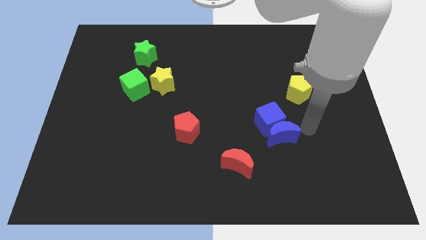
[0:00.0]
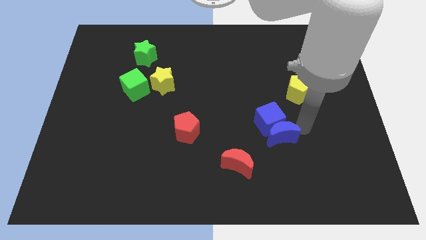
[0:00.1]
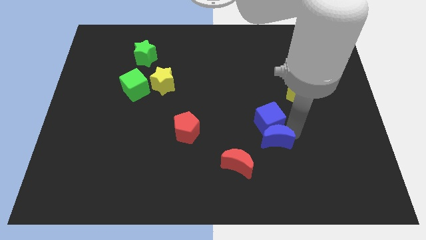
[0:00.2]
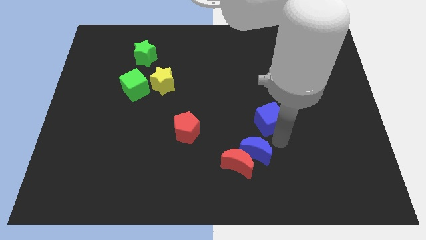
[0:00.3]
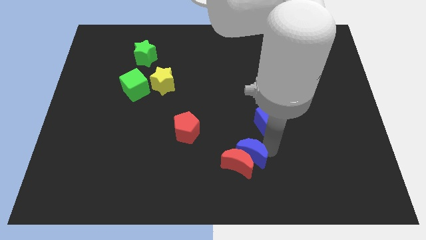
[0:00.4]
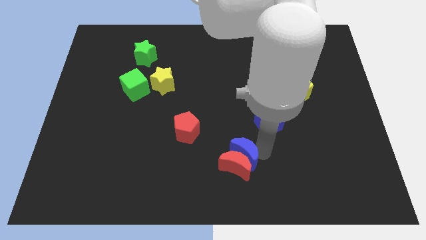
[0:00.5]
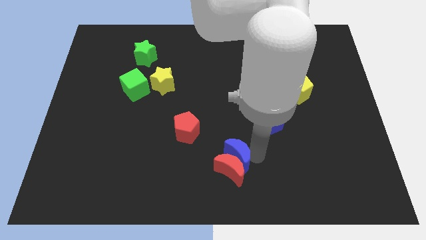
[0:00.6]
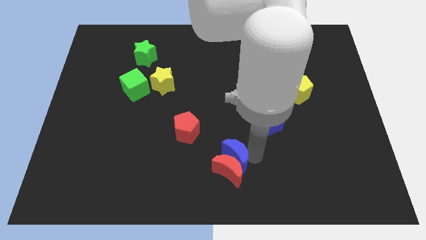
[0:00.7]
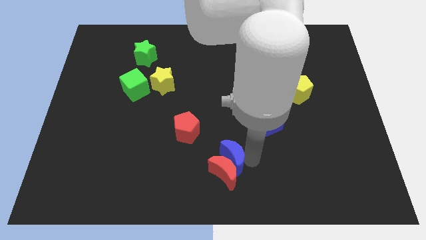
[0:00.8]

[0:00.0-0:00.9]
push blue crescent into the red crescent

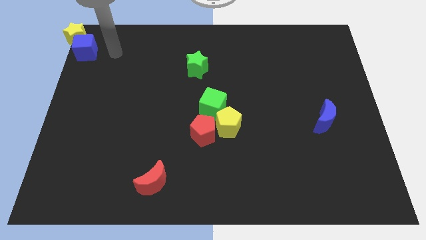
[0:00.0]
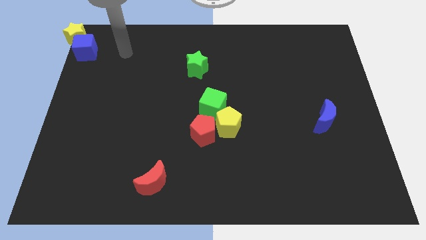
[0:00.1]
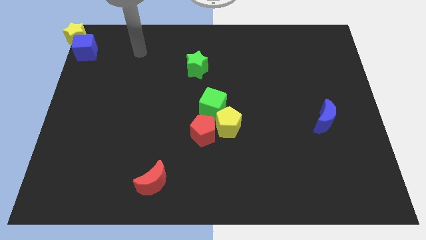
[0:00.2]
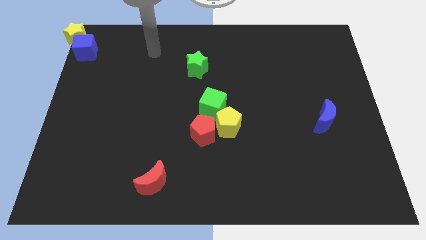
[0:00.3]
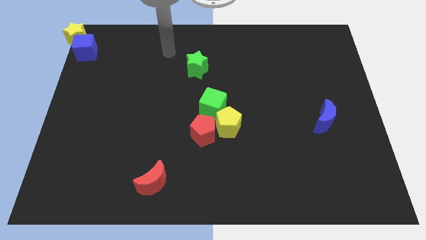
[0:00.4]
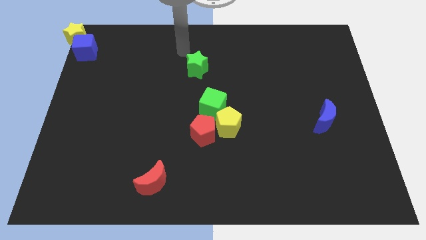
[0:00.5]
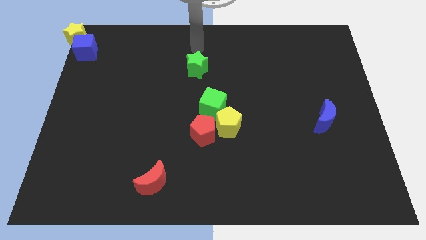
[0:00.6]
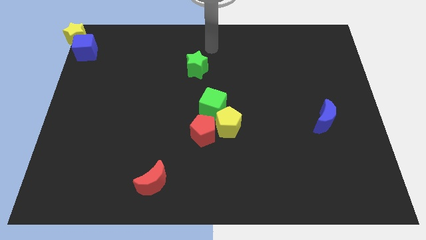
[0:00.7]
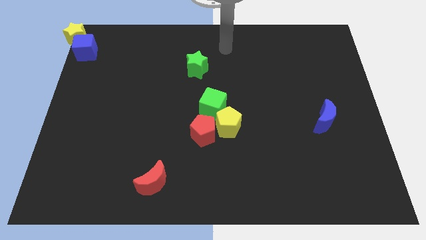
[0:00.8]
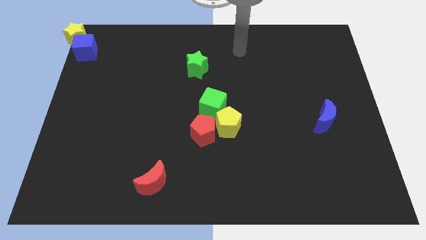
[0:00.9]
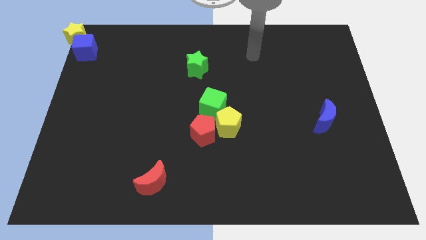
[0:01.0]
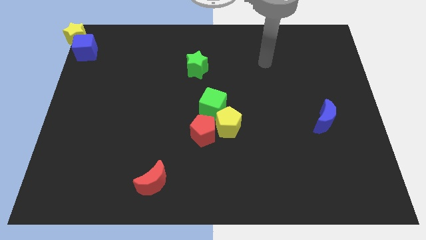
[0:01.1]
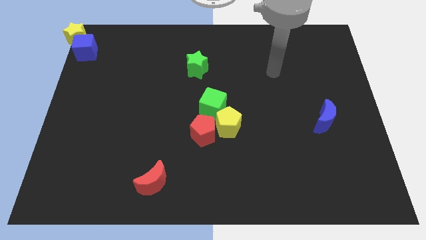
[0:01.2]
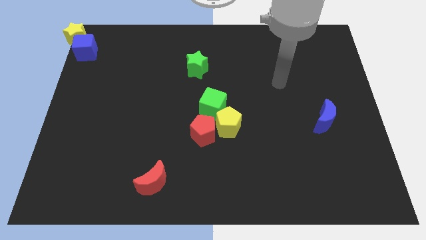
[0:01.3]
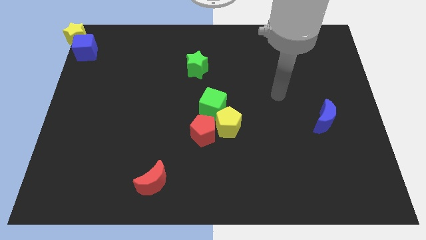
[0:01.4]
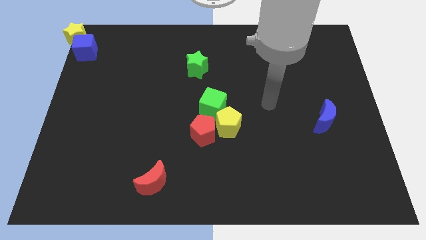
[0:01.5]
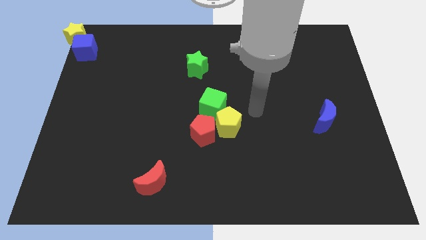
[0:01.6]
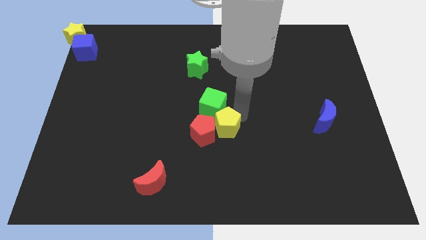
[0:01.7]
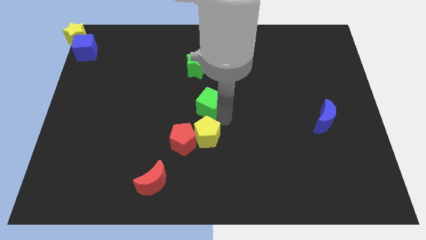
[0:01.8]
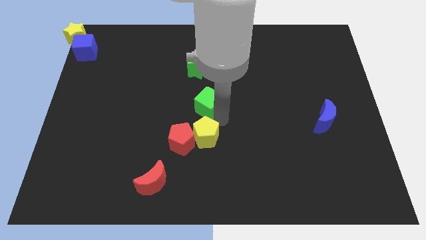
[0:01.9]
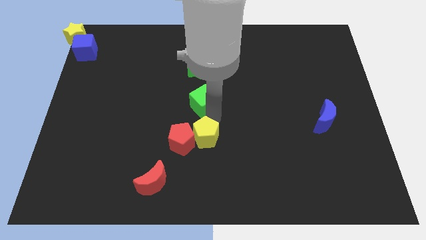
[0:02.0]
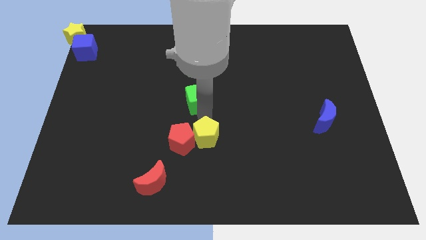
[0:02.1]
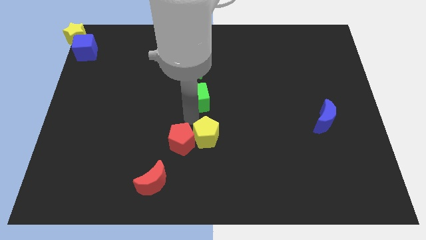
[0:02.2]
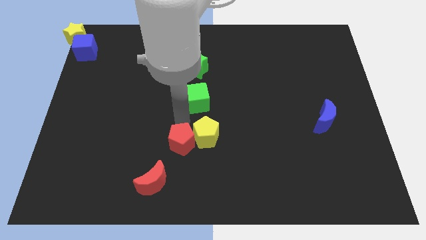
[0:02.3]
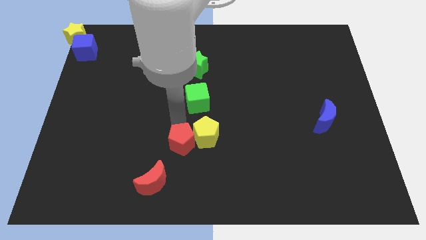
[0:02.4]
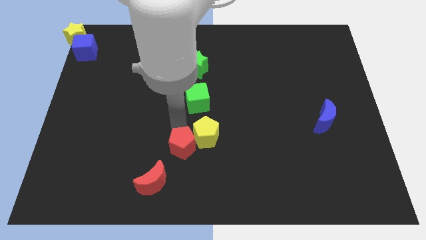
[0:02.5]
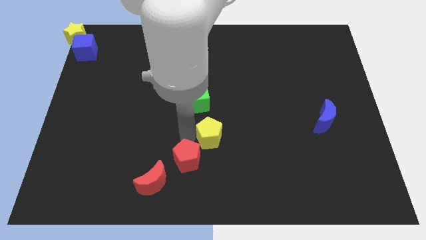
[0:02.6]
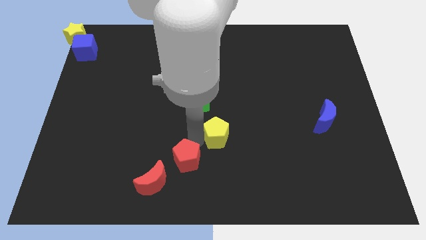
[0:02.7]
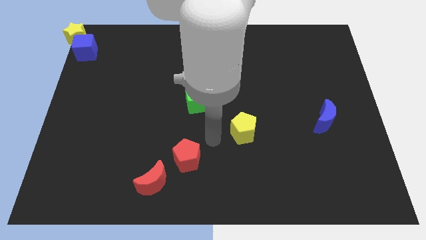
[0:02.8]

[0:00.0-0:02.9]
push green star below green cube

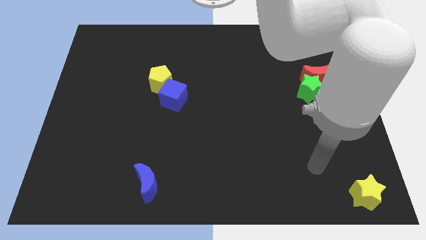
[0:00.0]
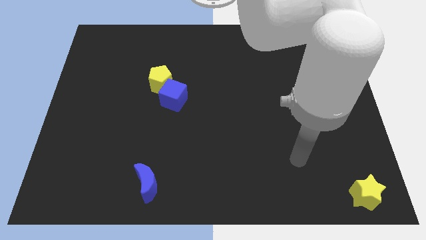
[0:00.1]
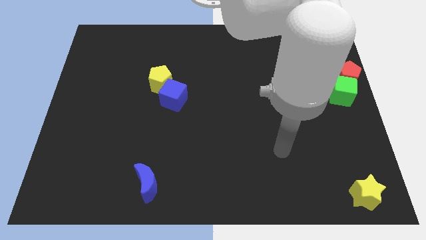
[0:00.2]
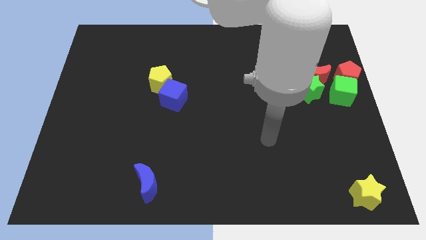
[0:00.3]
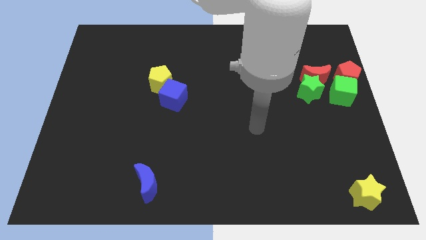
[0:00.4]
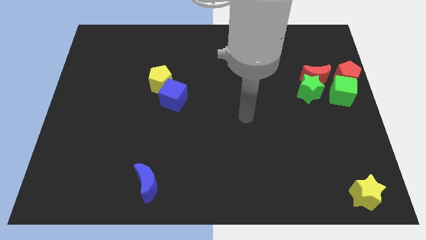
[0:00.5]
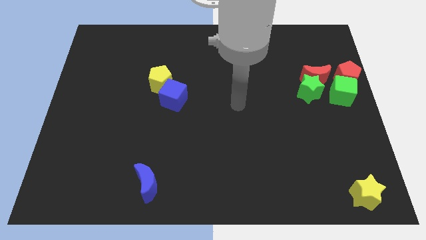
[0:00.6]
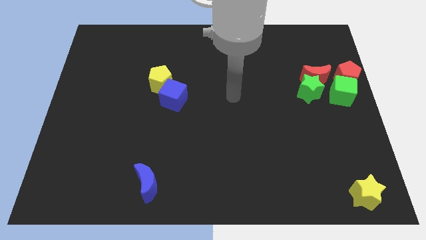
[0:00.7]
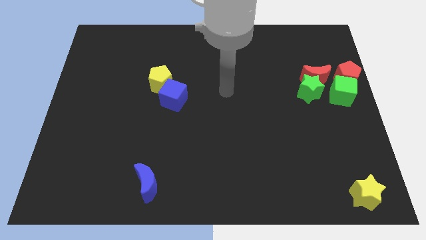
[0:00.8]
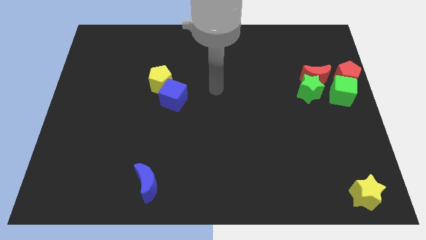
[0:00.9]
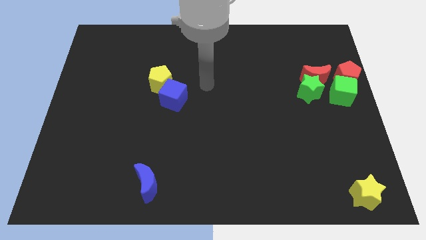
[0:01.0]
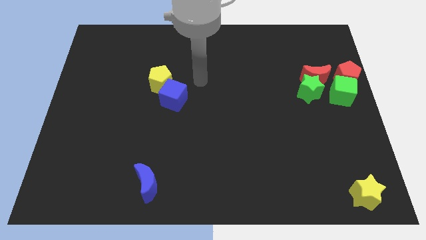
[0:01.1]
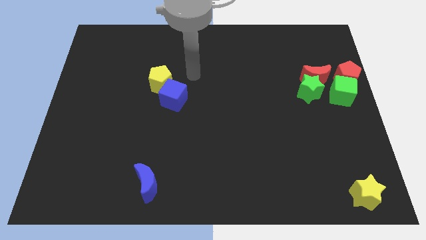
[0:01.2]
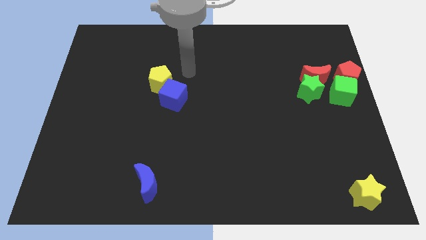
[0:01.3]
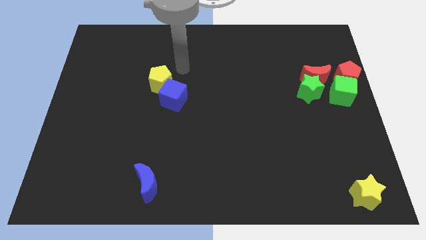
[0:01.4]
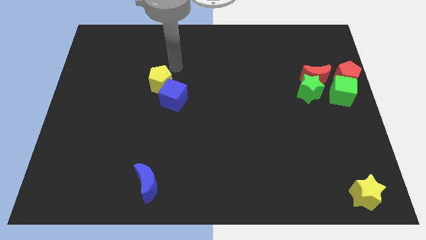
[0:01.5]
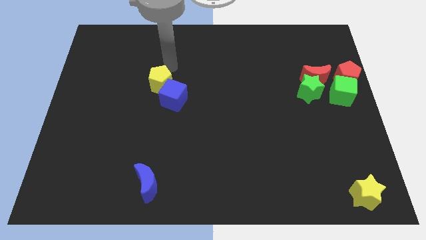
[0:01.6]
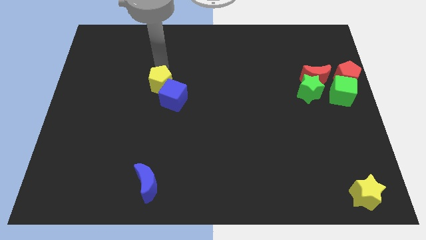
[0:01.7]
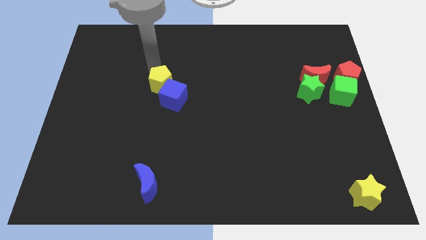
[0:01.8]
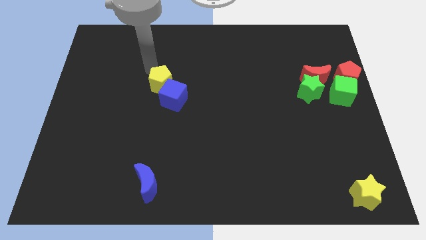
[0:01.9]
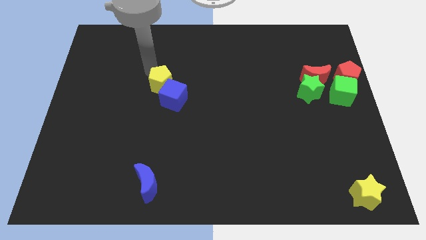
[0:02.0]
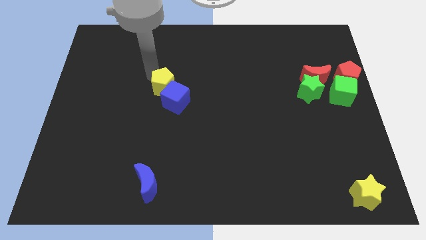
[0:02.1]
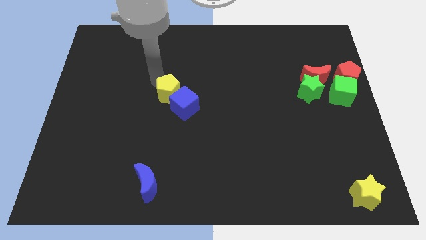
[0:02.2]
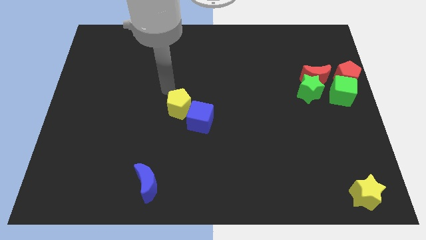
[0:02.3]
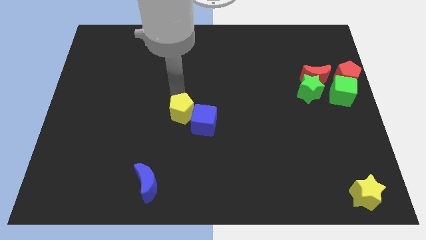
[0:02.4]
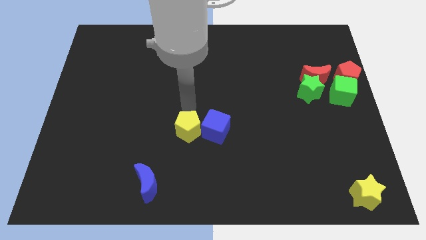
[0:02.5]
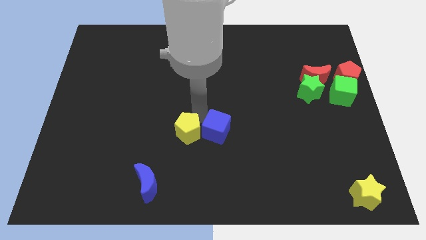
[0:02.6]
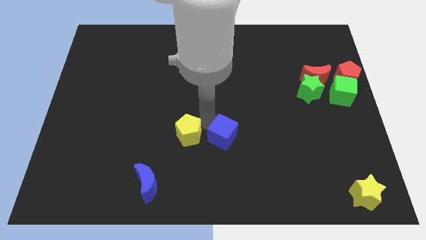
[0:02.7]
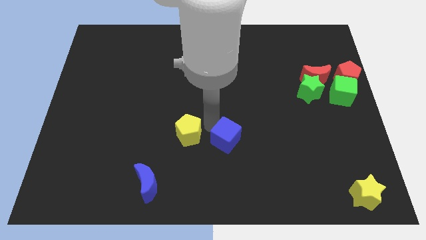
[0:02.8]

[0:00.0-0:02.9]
move the yellow pentagon and the blue cube to the bottom of the board

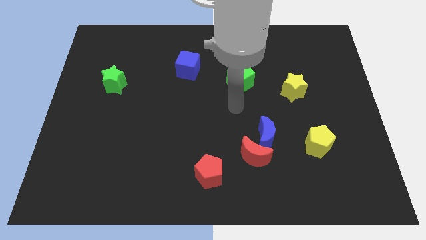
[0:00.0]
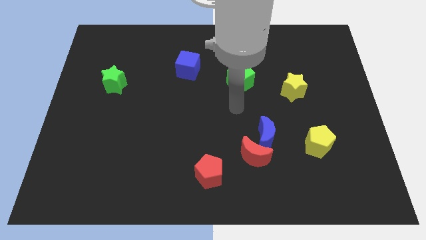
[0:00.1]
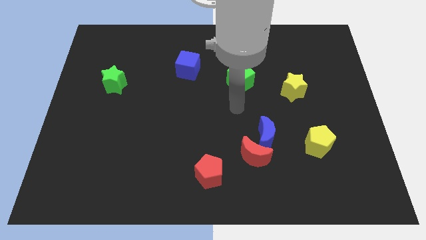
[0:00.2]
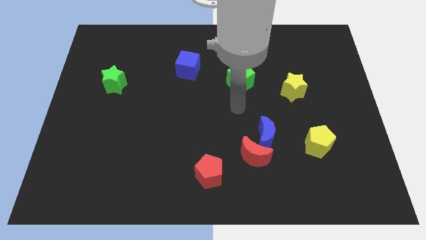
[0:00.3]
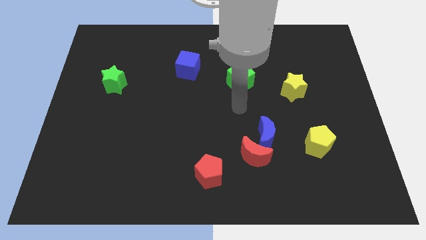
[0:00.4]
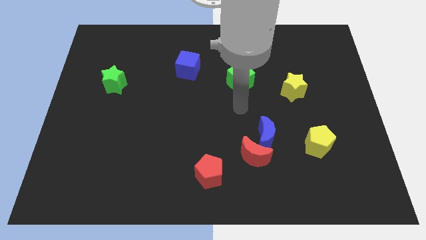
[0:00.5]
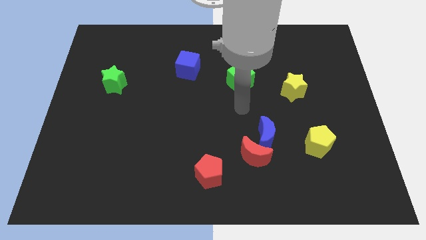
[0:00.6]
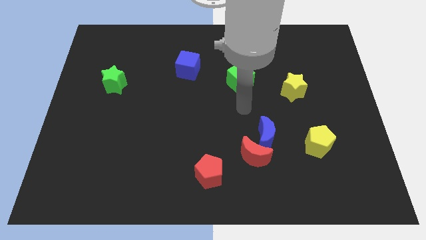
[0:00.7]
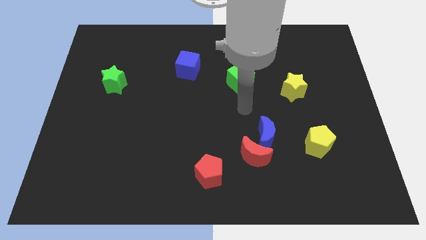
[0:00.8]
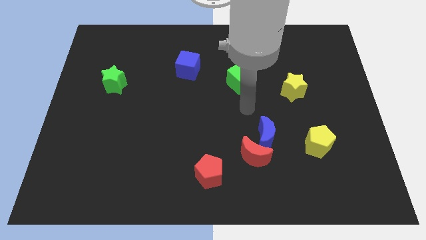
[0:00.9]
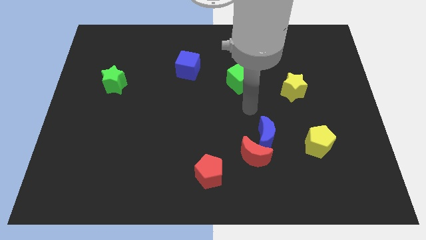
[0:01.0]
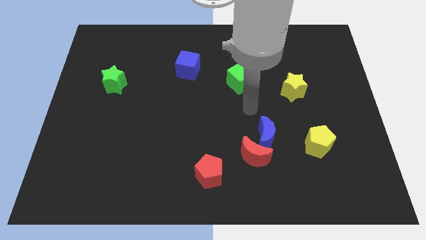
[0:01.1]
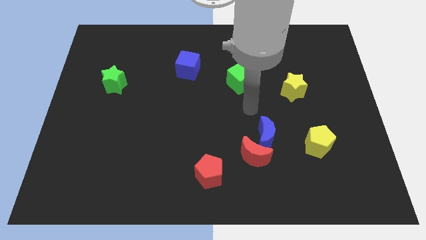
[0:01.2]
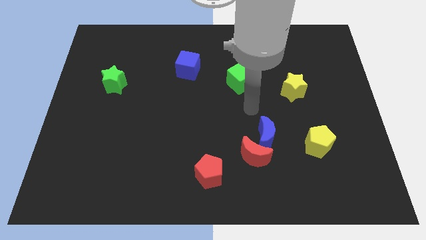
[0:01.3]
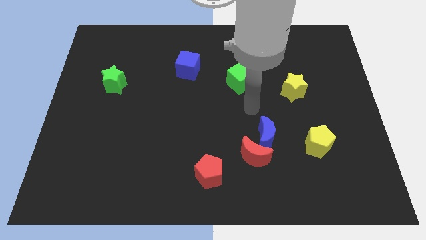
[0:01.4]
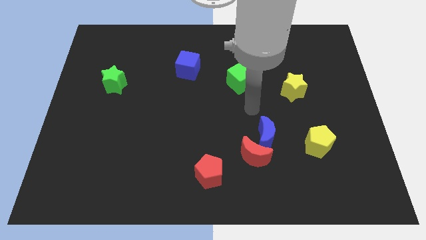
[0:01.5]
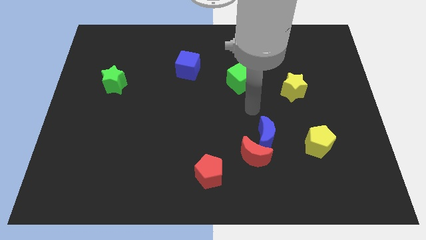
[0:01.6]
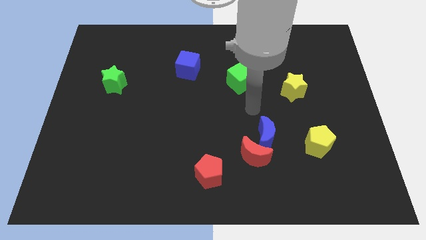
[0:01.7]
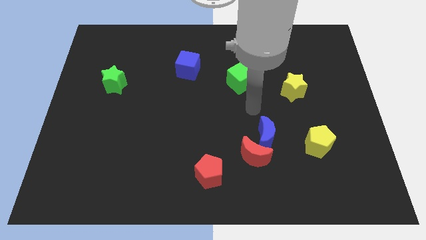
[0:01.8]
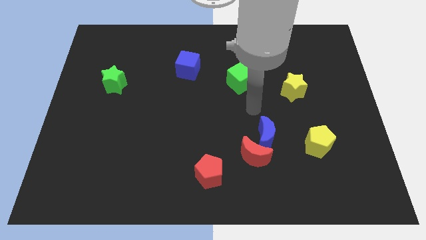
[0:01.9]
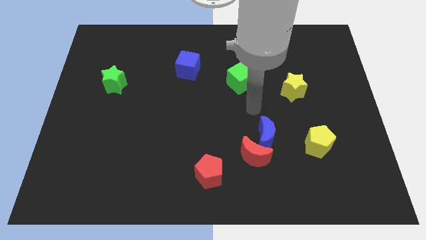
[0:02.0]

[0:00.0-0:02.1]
place your arm in between the green cube and blue moon

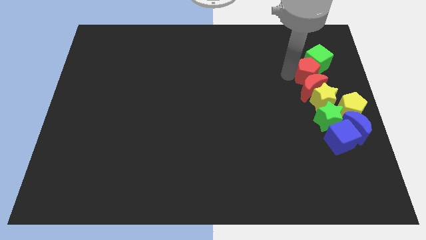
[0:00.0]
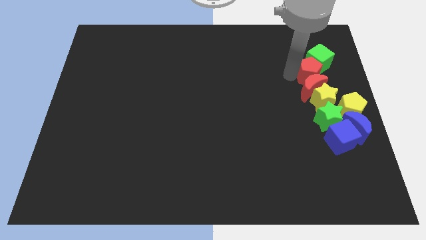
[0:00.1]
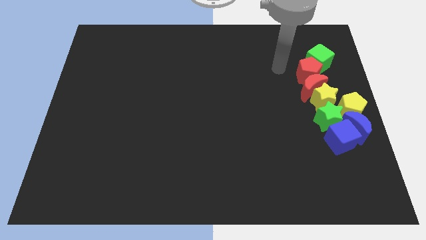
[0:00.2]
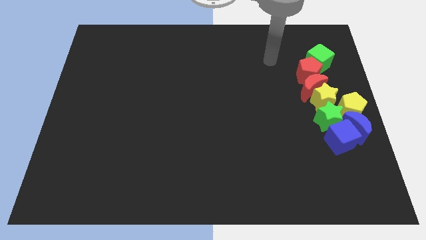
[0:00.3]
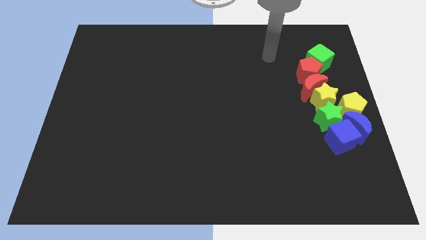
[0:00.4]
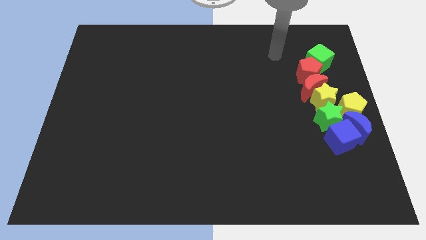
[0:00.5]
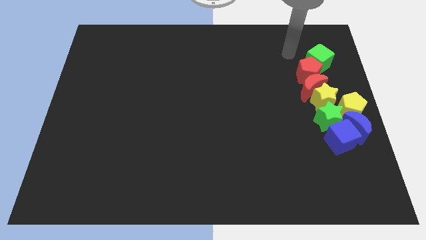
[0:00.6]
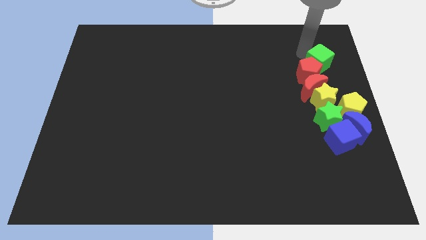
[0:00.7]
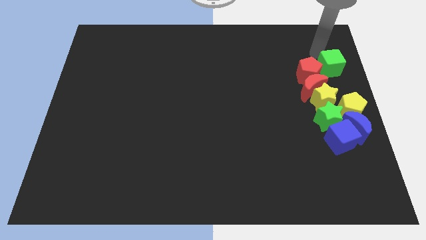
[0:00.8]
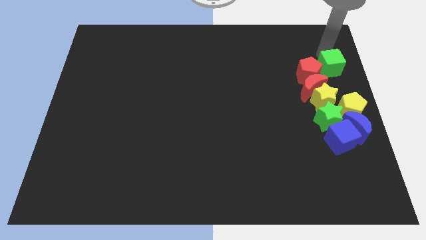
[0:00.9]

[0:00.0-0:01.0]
place the green cube to the right side of red pentagon
